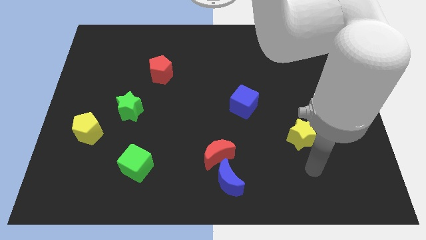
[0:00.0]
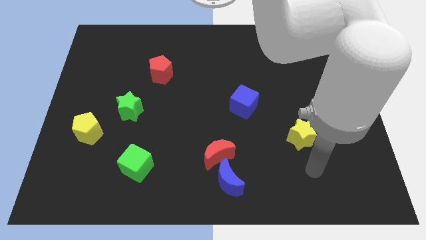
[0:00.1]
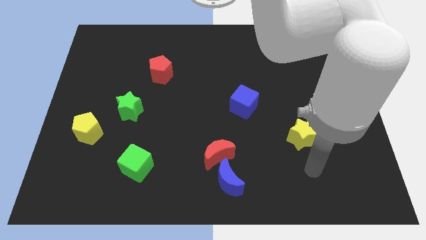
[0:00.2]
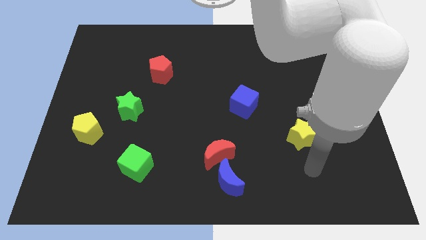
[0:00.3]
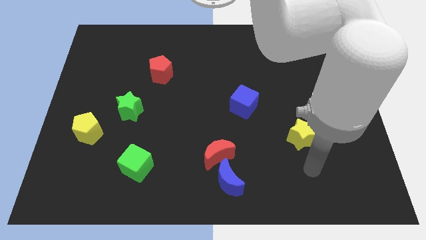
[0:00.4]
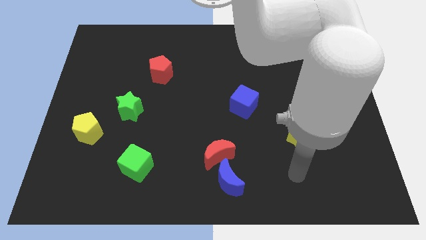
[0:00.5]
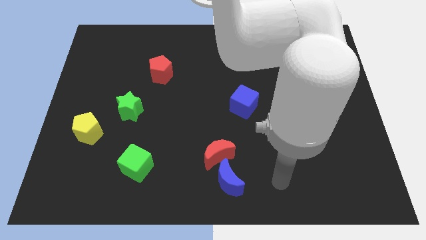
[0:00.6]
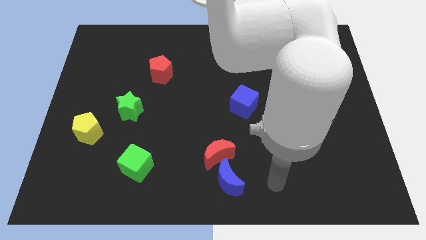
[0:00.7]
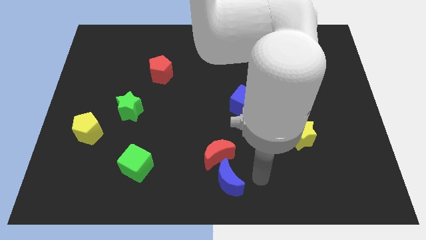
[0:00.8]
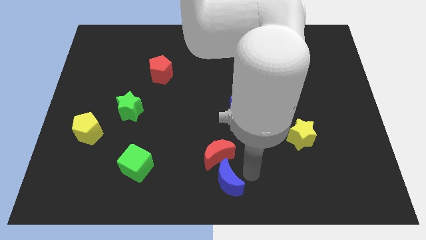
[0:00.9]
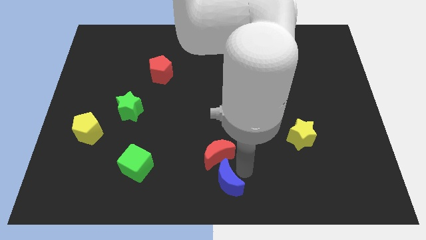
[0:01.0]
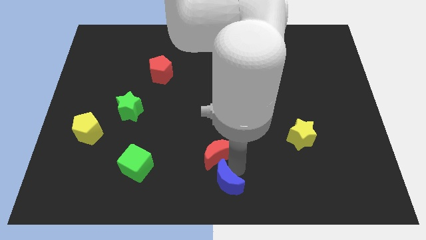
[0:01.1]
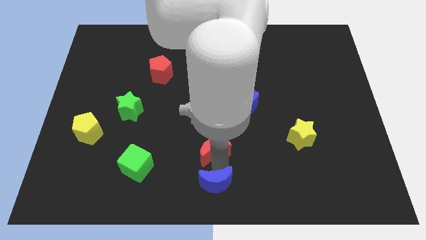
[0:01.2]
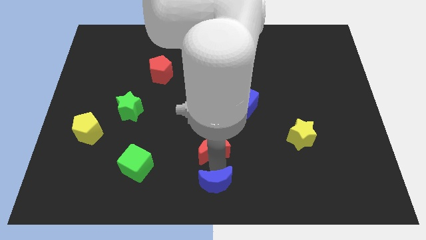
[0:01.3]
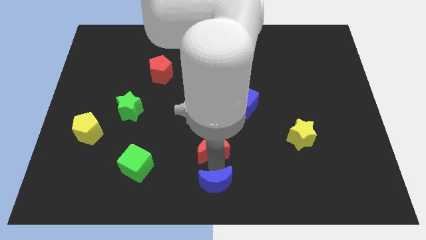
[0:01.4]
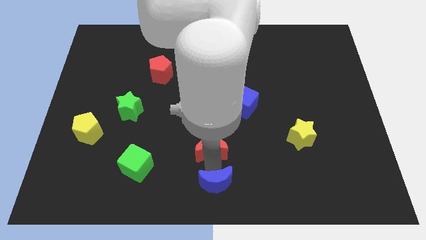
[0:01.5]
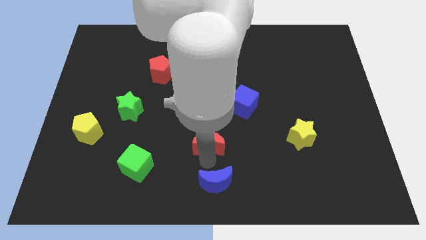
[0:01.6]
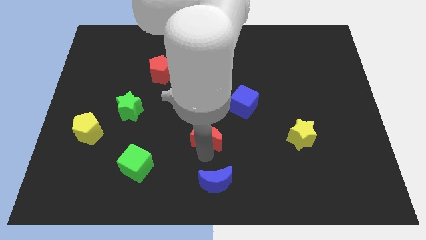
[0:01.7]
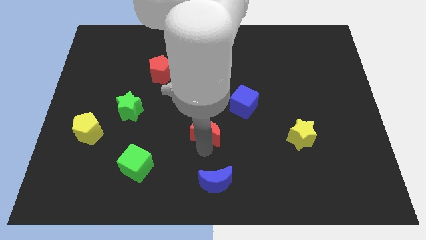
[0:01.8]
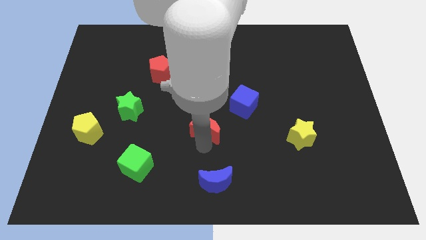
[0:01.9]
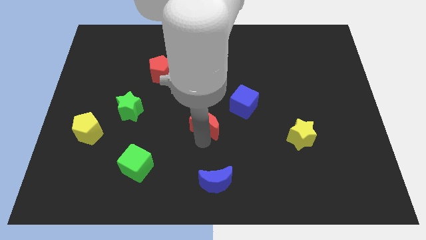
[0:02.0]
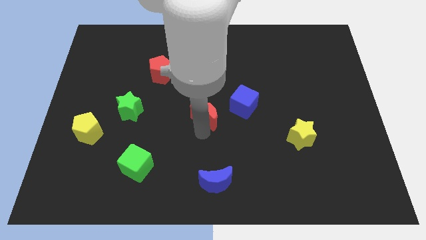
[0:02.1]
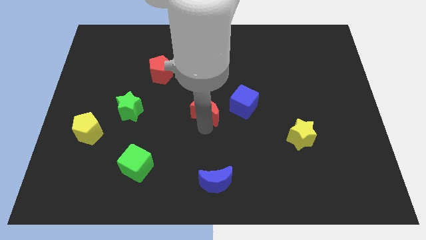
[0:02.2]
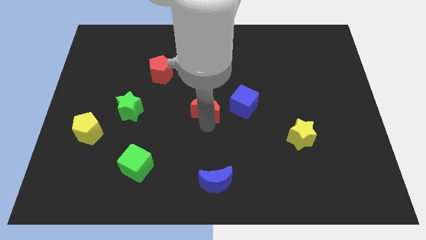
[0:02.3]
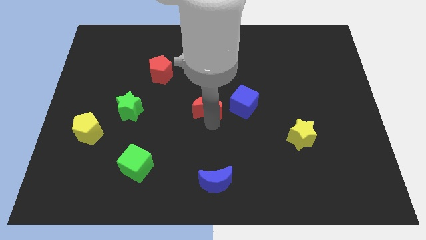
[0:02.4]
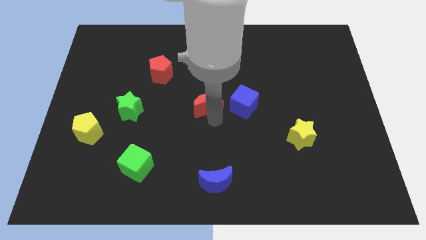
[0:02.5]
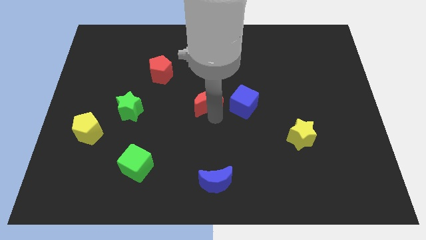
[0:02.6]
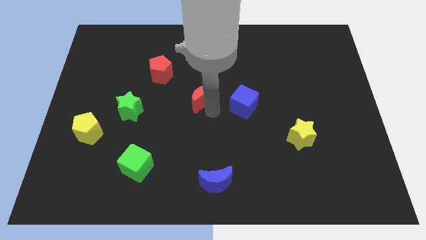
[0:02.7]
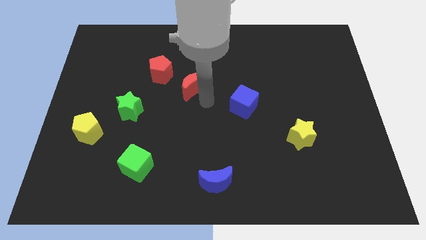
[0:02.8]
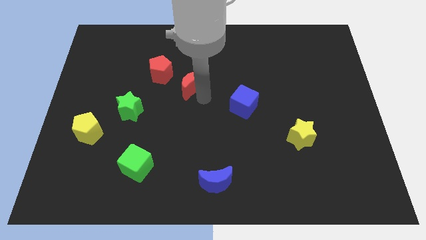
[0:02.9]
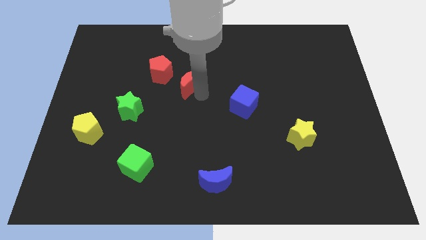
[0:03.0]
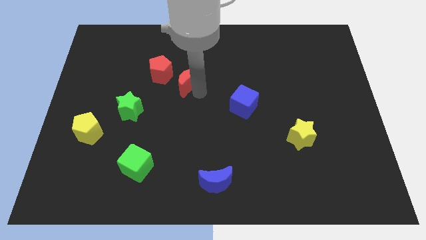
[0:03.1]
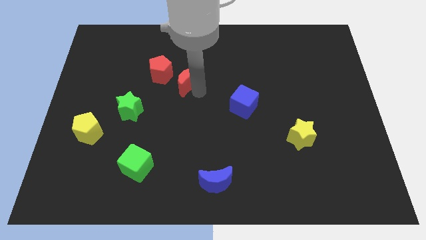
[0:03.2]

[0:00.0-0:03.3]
push the red moon to the bottom right side of the red pentagon

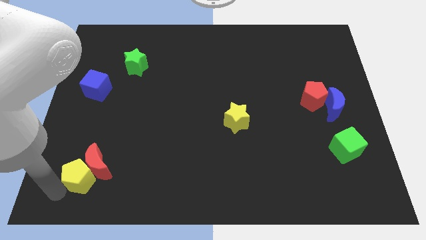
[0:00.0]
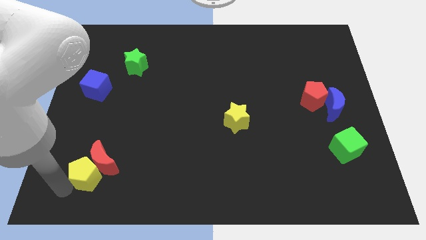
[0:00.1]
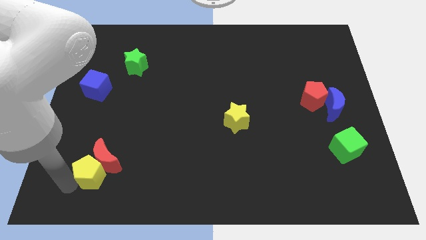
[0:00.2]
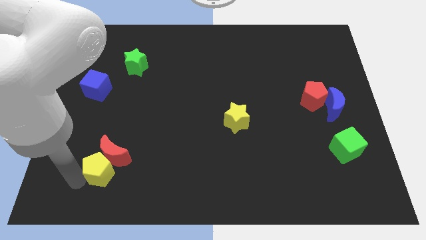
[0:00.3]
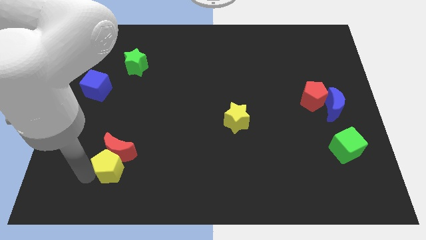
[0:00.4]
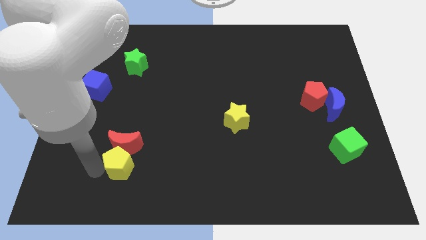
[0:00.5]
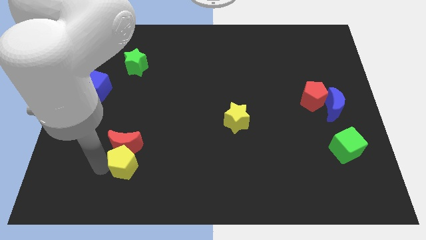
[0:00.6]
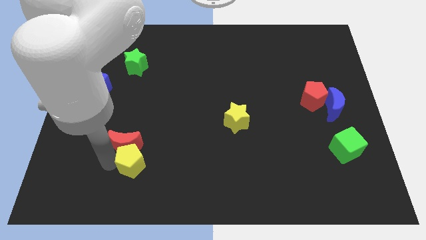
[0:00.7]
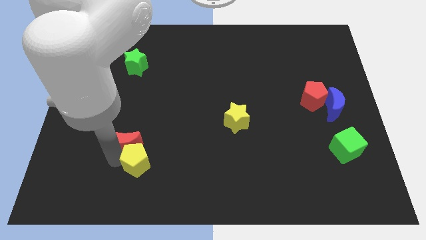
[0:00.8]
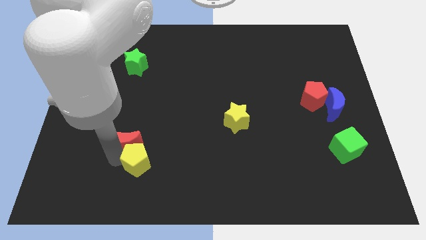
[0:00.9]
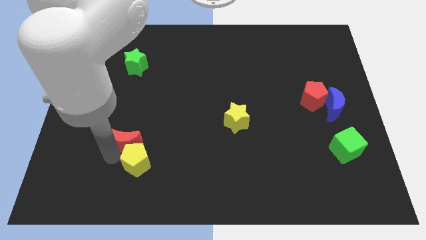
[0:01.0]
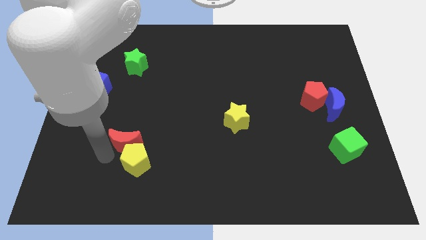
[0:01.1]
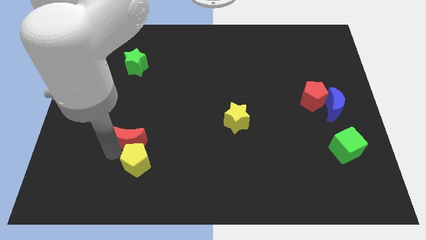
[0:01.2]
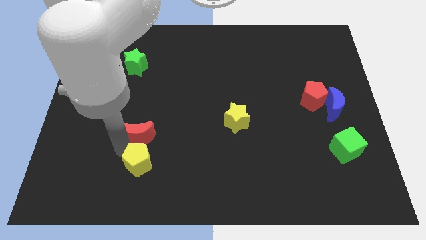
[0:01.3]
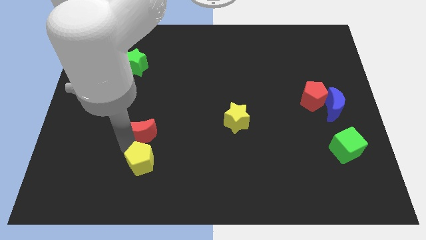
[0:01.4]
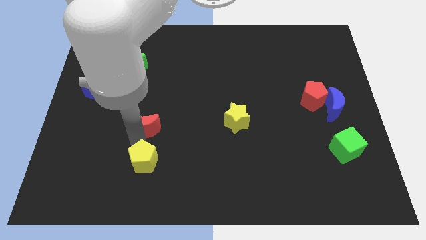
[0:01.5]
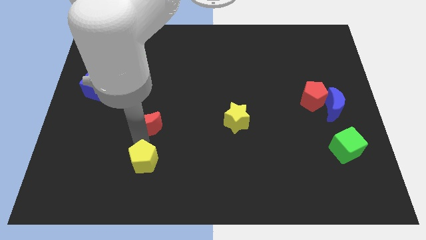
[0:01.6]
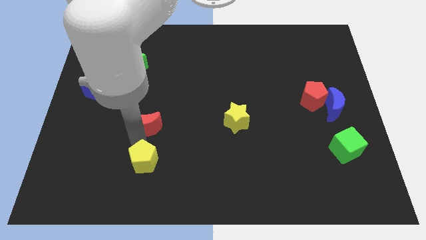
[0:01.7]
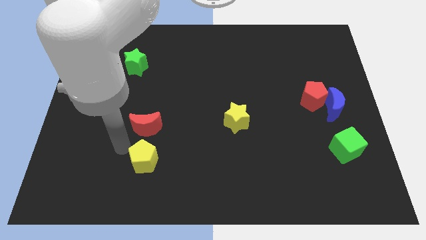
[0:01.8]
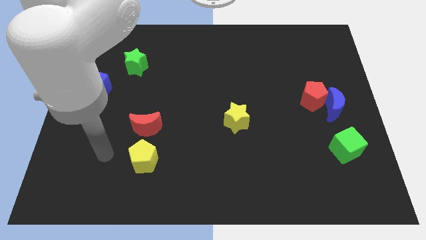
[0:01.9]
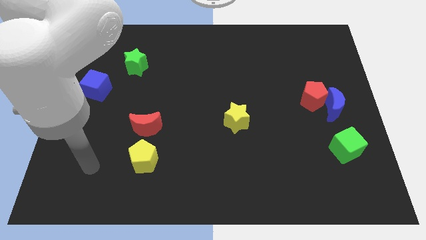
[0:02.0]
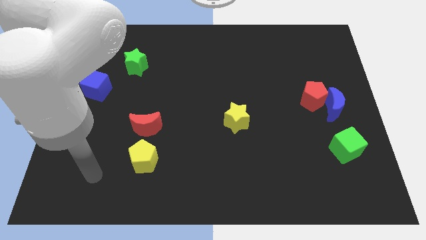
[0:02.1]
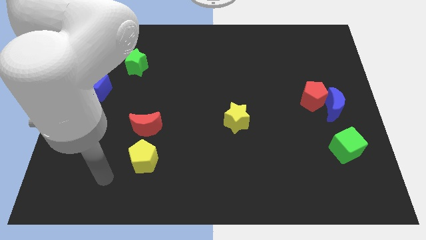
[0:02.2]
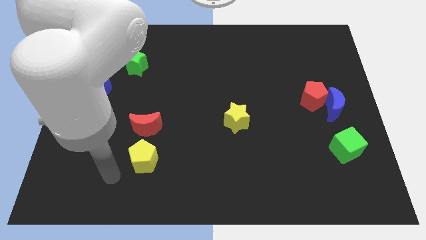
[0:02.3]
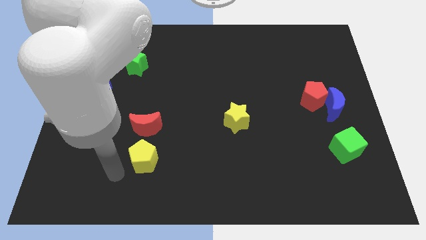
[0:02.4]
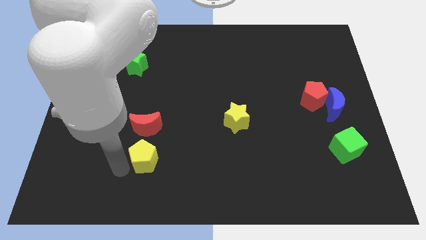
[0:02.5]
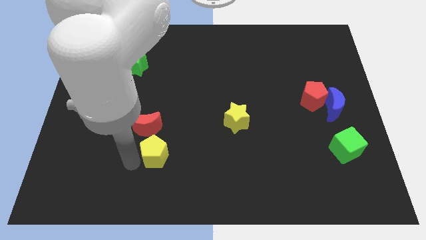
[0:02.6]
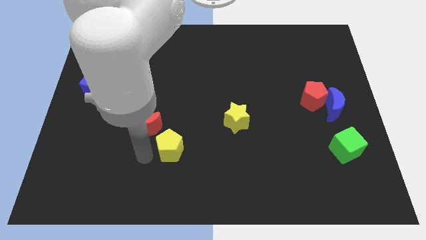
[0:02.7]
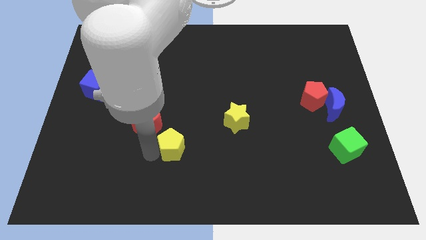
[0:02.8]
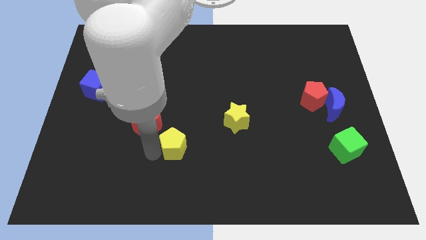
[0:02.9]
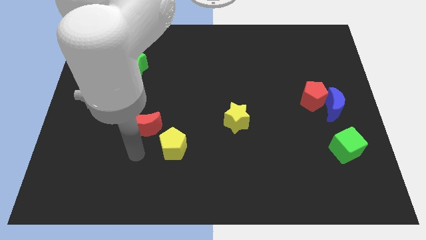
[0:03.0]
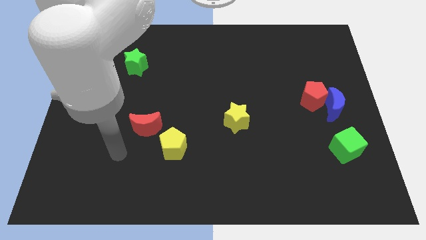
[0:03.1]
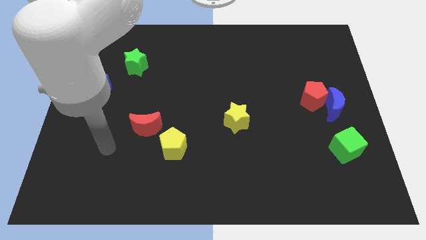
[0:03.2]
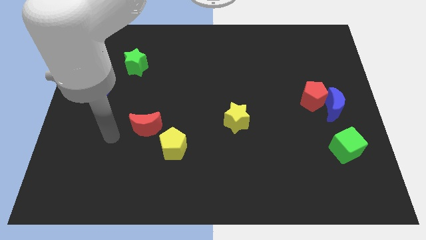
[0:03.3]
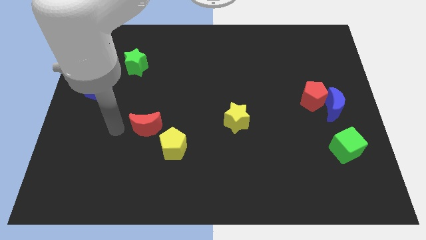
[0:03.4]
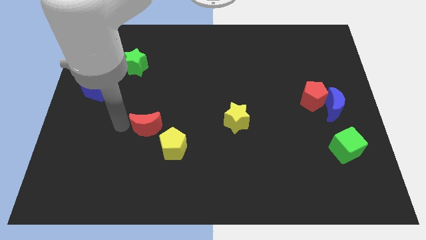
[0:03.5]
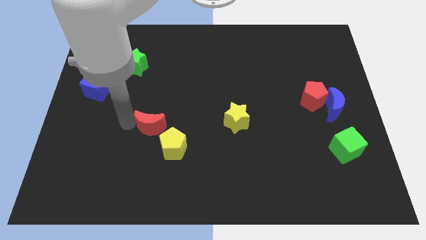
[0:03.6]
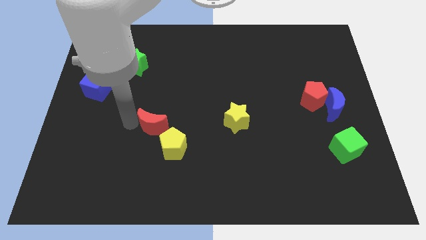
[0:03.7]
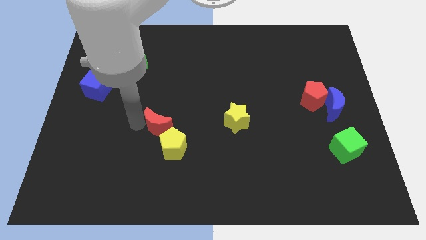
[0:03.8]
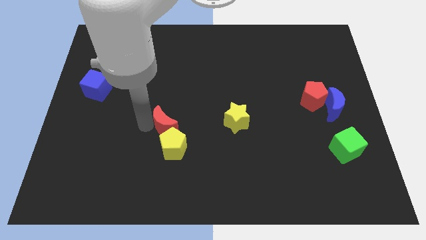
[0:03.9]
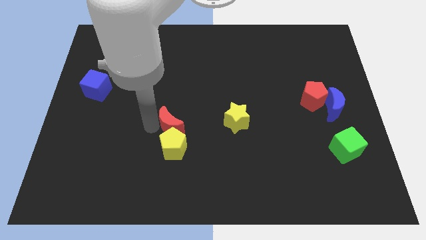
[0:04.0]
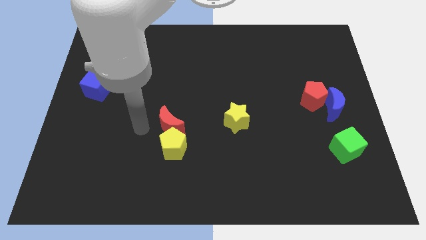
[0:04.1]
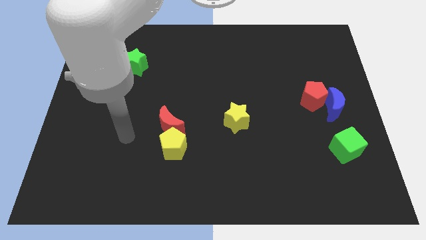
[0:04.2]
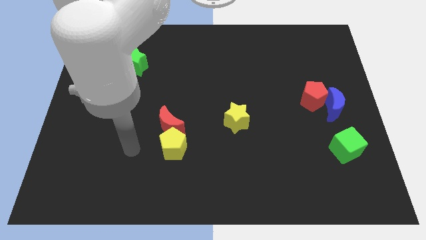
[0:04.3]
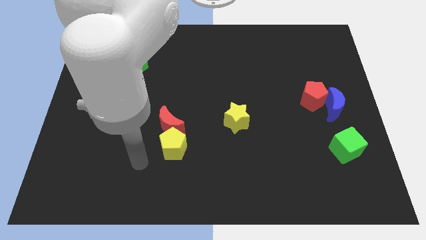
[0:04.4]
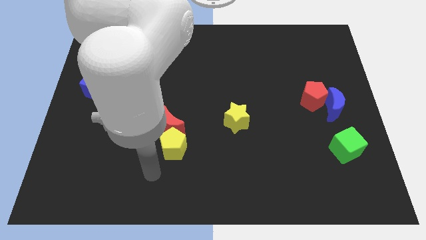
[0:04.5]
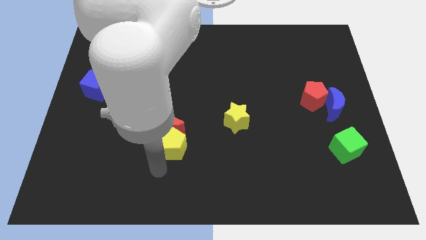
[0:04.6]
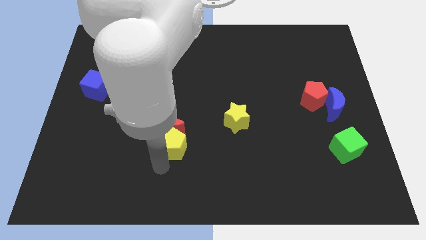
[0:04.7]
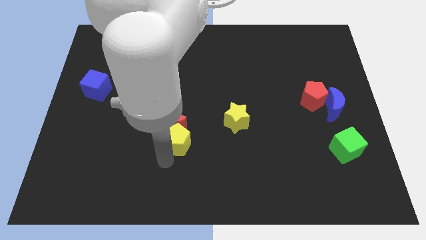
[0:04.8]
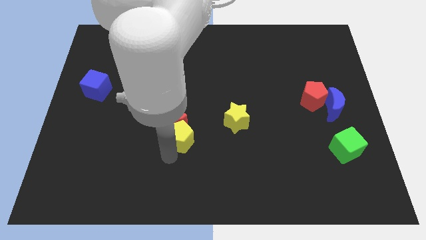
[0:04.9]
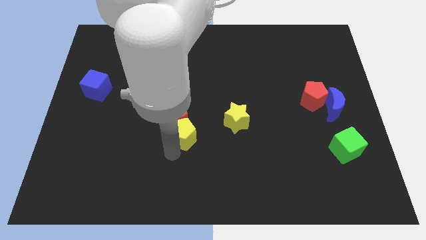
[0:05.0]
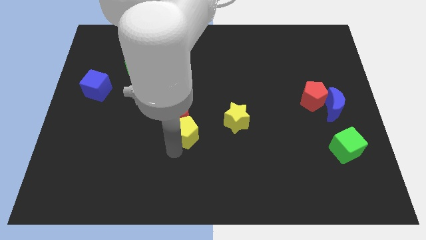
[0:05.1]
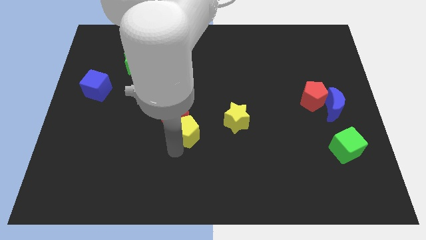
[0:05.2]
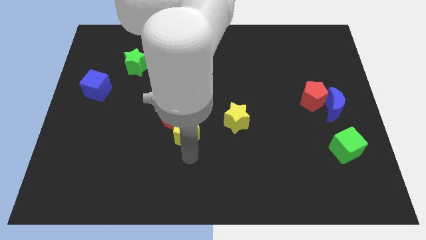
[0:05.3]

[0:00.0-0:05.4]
push the red moon and yellow pentagon slightly towards the left side of the yellow star

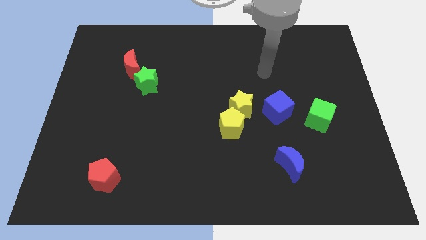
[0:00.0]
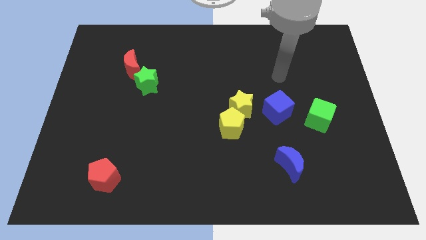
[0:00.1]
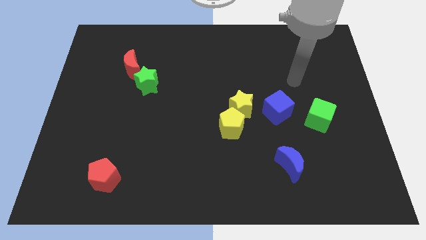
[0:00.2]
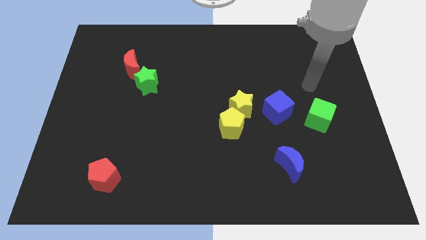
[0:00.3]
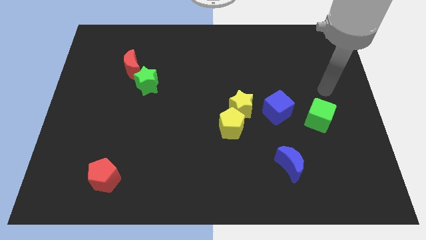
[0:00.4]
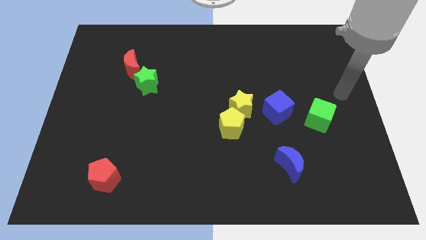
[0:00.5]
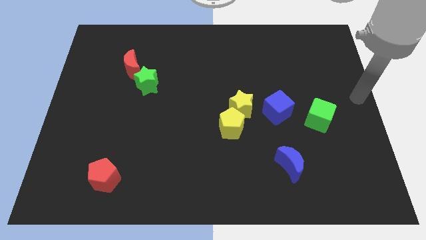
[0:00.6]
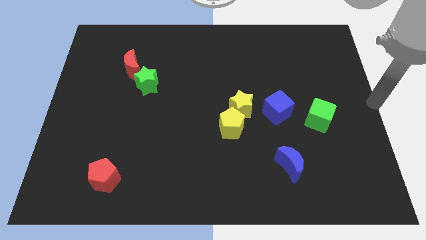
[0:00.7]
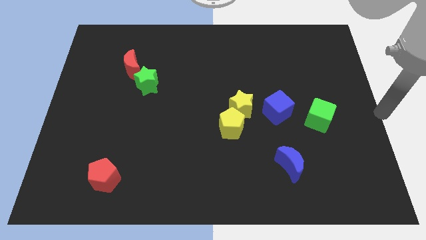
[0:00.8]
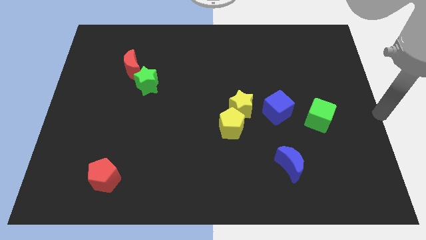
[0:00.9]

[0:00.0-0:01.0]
move your arm to the centre right of the board
